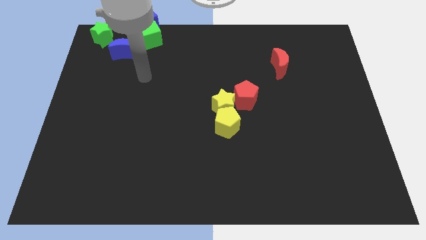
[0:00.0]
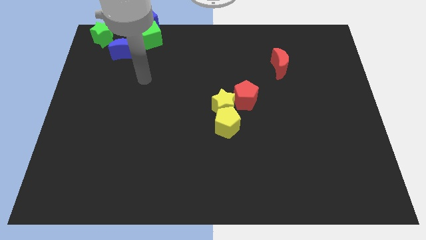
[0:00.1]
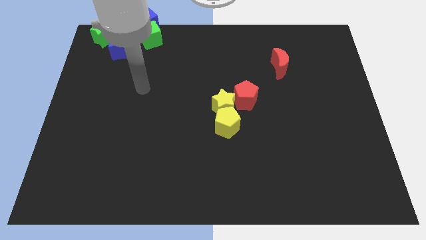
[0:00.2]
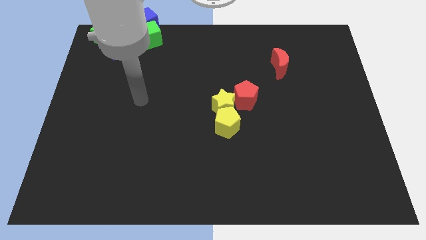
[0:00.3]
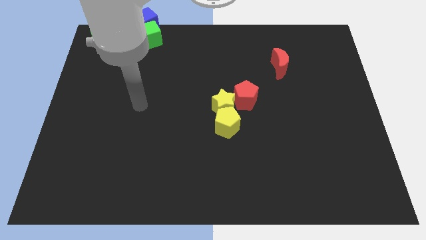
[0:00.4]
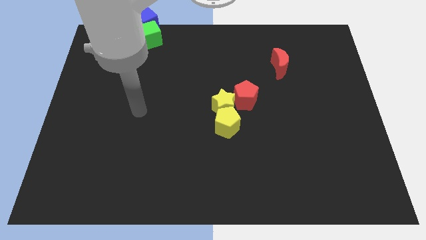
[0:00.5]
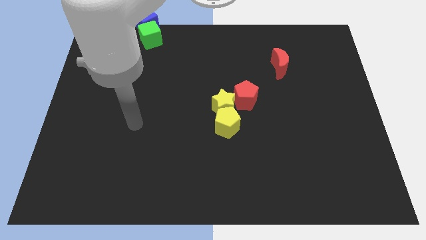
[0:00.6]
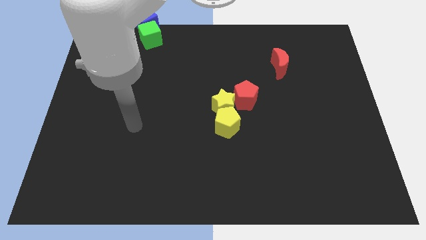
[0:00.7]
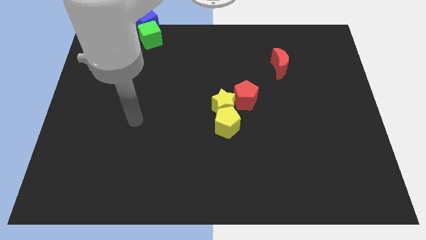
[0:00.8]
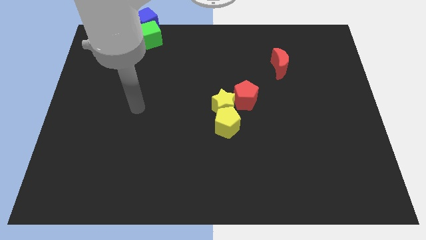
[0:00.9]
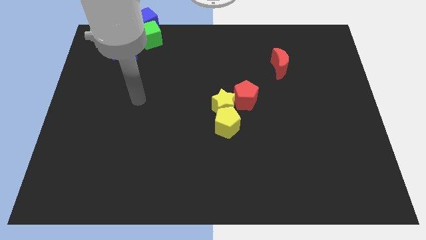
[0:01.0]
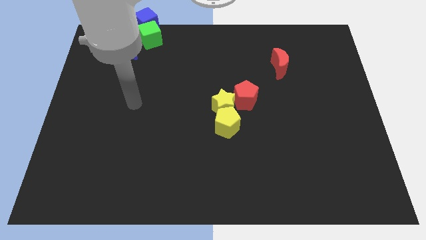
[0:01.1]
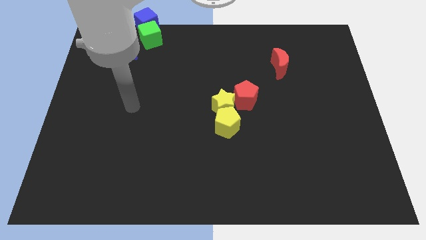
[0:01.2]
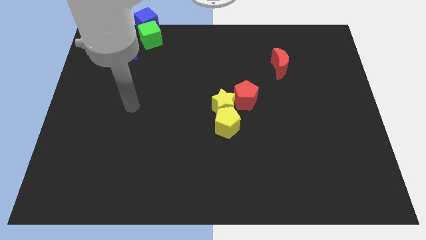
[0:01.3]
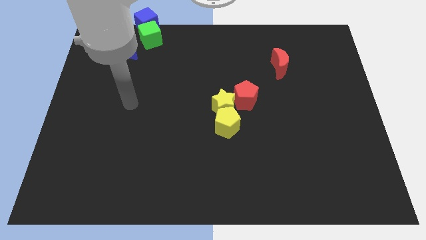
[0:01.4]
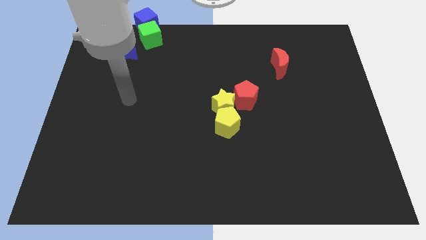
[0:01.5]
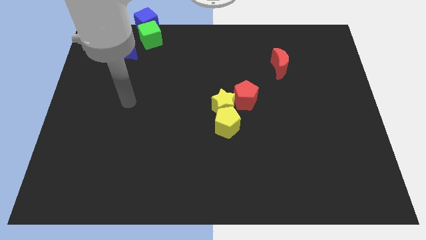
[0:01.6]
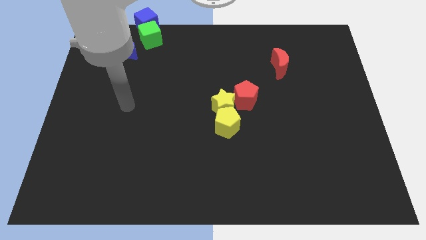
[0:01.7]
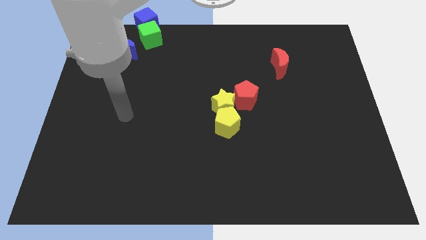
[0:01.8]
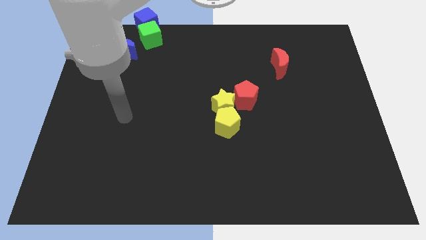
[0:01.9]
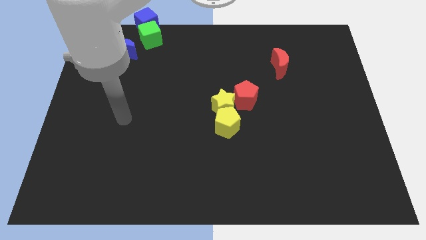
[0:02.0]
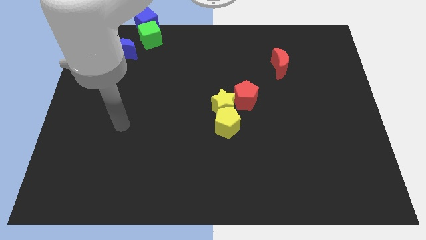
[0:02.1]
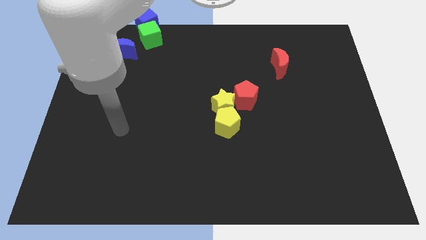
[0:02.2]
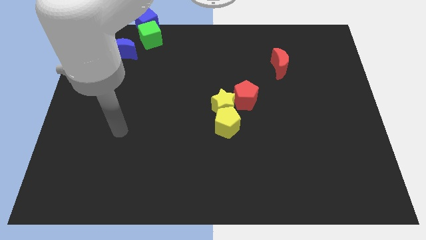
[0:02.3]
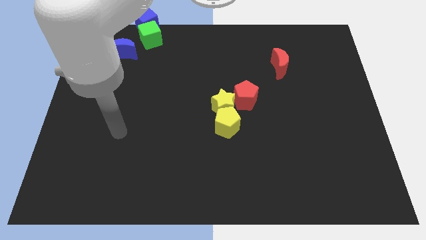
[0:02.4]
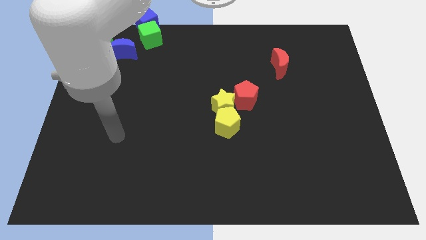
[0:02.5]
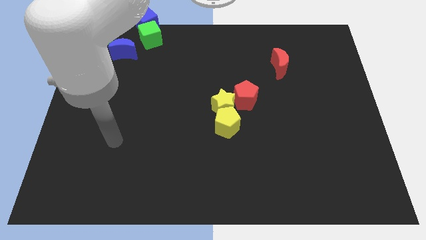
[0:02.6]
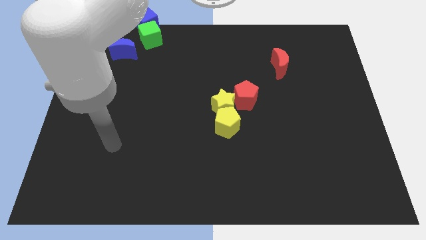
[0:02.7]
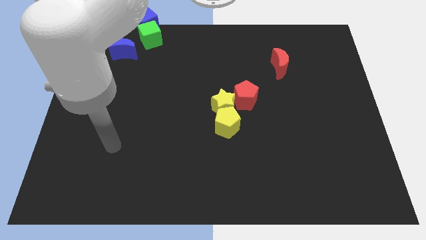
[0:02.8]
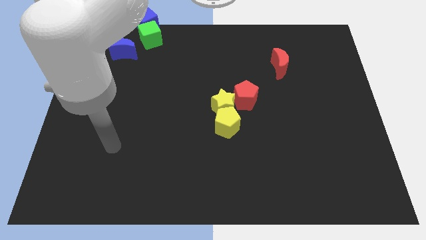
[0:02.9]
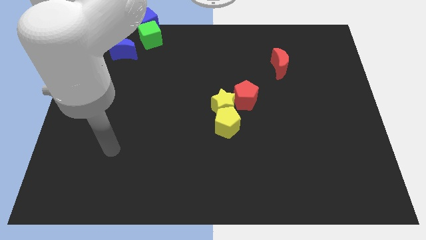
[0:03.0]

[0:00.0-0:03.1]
point your arm vertically below the blue crescent

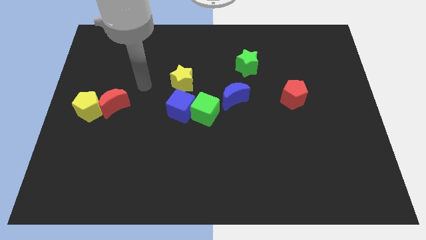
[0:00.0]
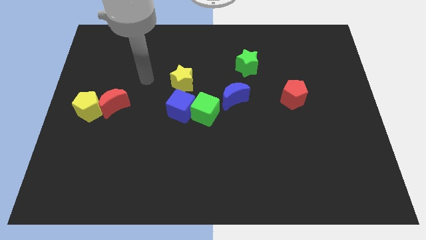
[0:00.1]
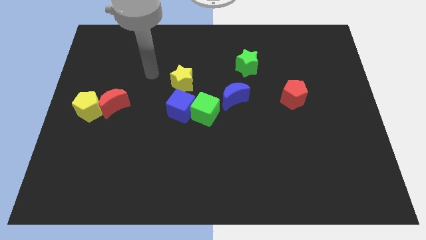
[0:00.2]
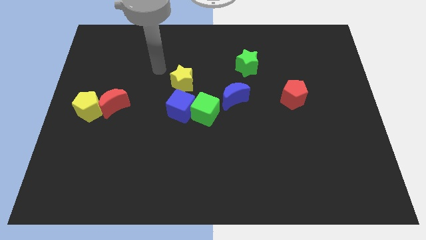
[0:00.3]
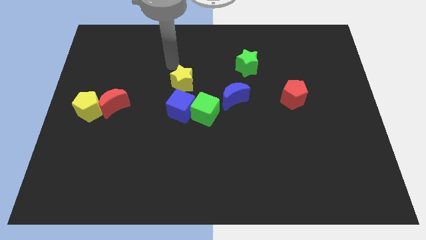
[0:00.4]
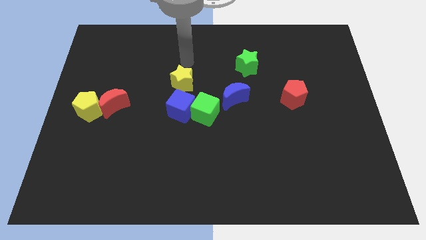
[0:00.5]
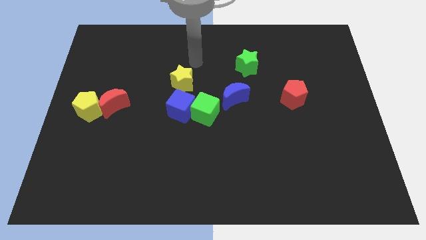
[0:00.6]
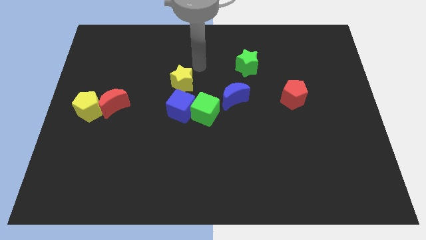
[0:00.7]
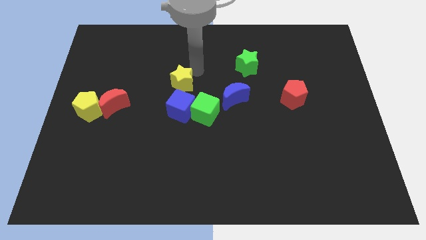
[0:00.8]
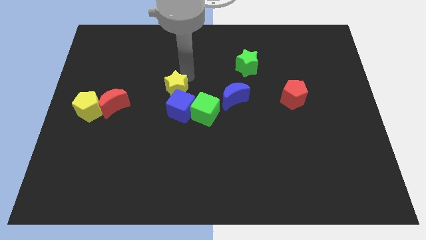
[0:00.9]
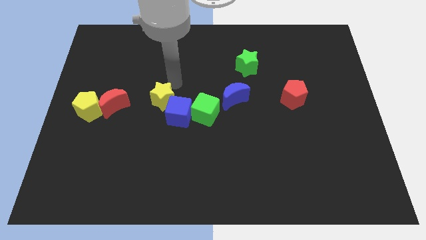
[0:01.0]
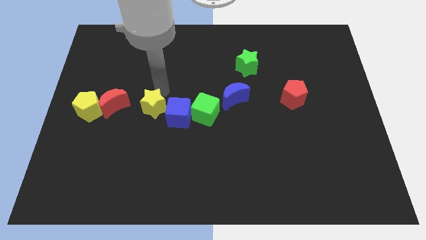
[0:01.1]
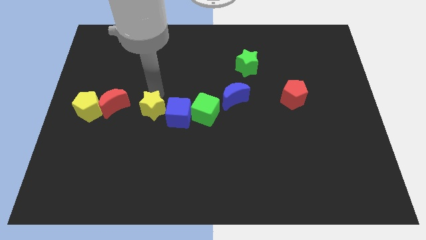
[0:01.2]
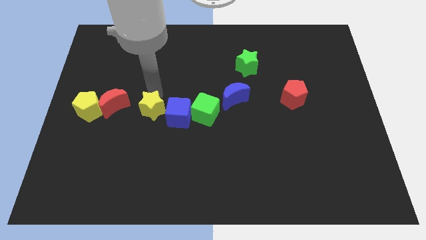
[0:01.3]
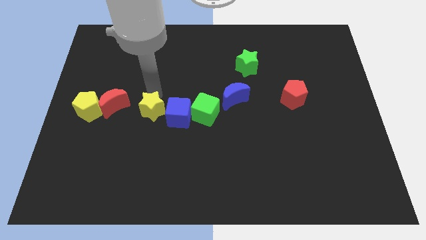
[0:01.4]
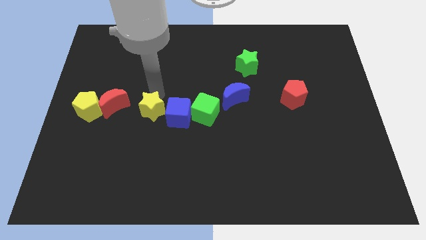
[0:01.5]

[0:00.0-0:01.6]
move the yellow star to the left side of the blue cube

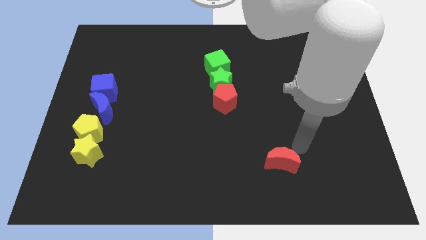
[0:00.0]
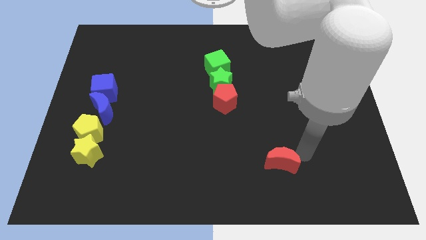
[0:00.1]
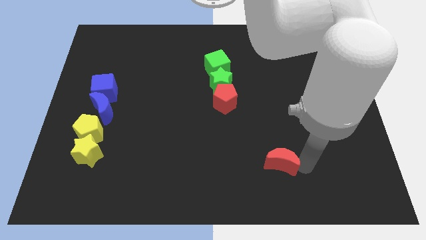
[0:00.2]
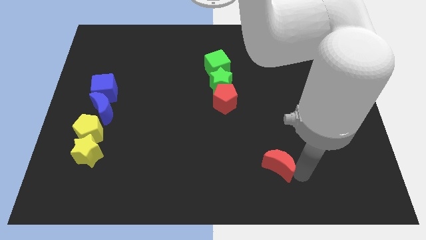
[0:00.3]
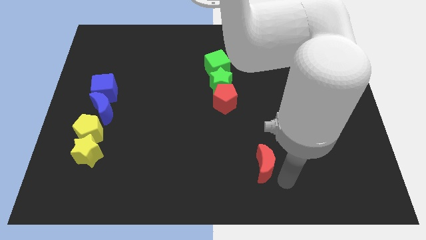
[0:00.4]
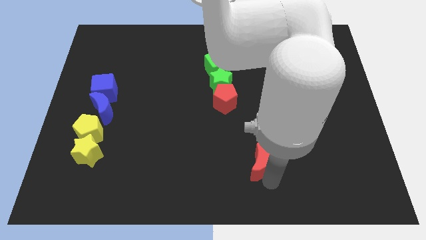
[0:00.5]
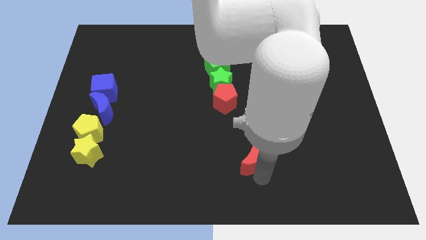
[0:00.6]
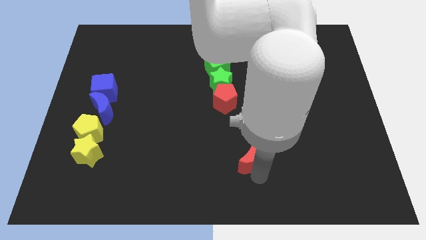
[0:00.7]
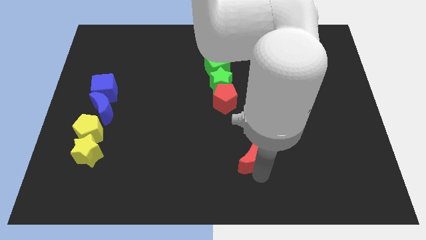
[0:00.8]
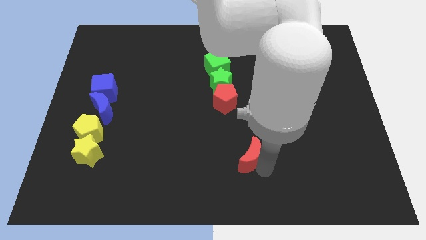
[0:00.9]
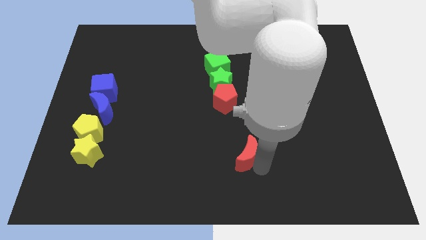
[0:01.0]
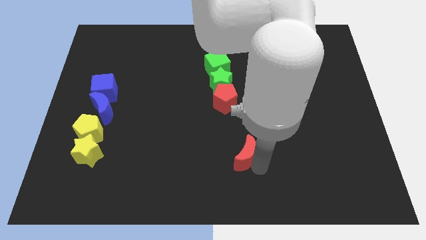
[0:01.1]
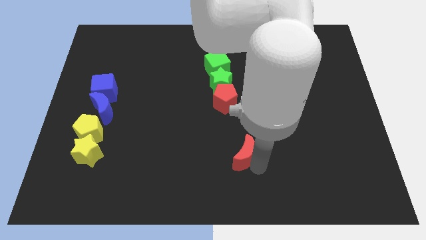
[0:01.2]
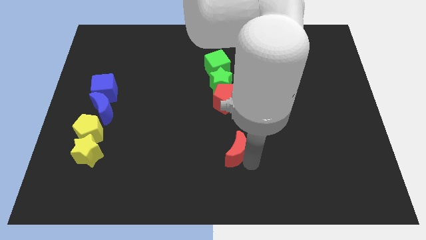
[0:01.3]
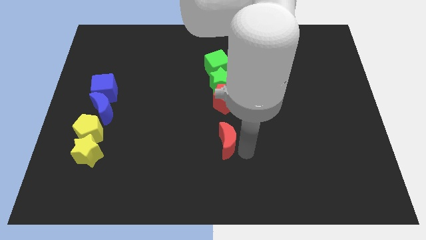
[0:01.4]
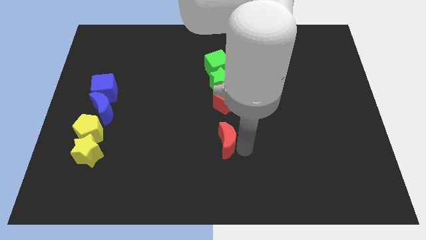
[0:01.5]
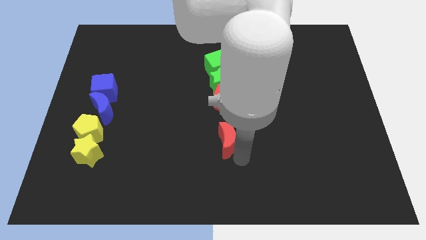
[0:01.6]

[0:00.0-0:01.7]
put the red moon vertically below the red pentagon

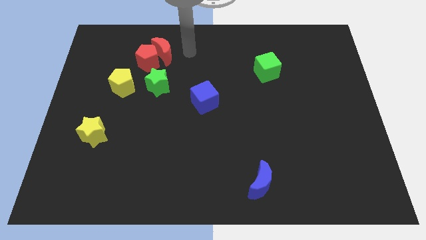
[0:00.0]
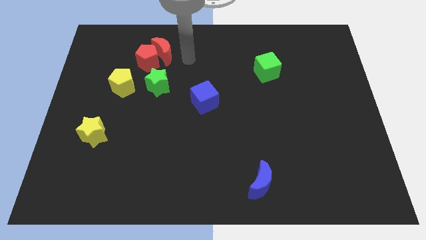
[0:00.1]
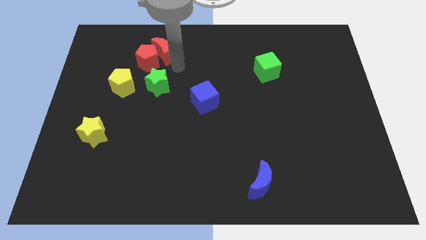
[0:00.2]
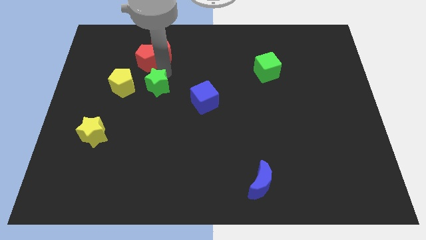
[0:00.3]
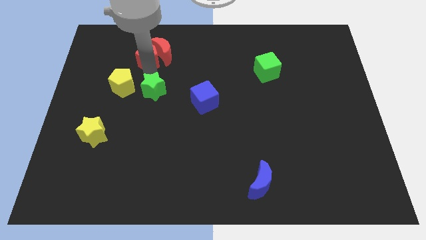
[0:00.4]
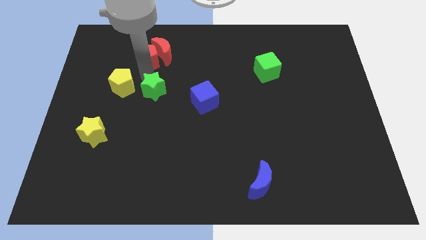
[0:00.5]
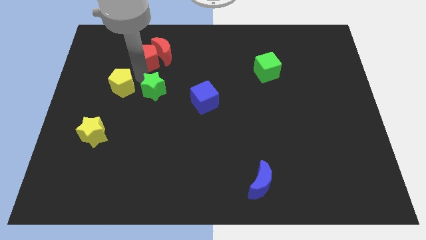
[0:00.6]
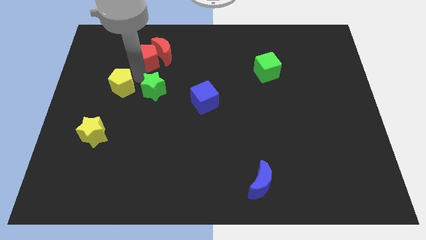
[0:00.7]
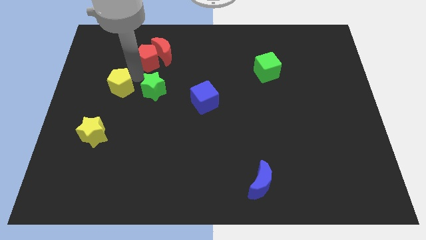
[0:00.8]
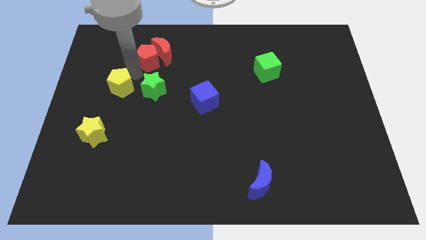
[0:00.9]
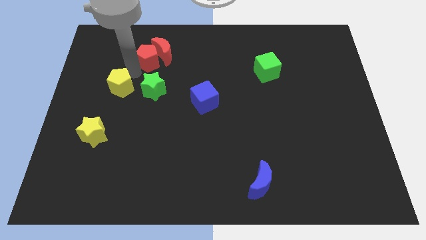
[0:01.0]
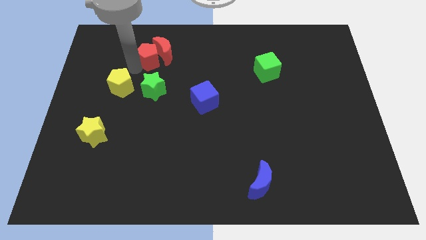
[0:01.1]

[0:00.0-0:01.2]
point your arm between red and yellow pentagons

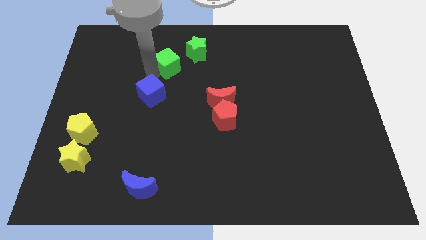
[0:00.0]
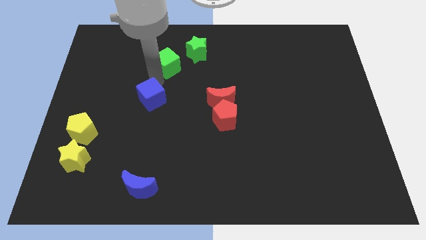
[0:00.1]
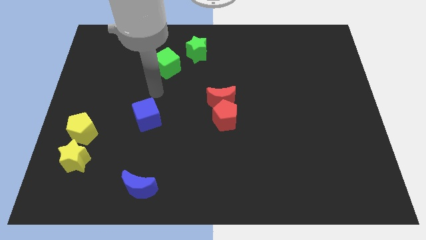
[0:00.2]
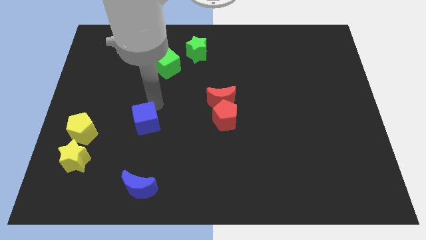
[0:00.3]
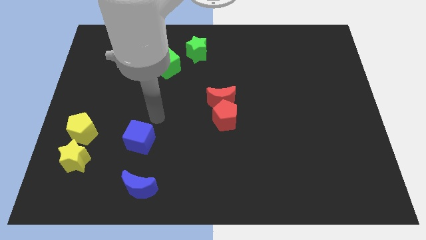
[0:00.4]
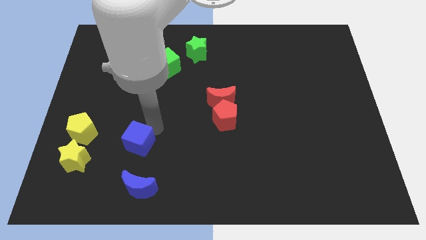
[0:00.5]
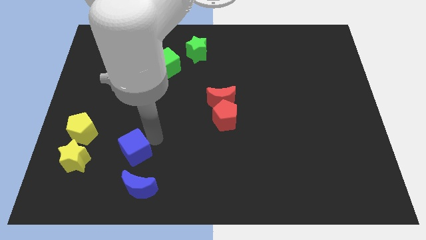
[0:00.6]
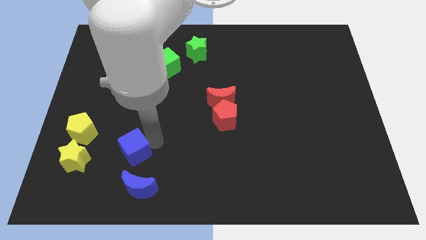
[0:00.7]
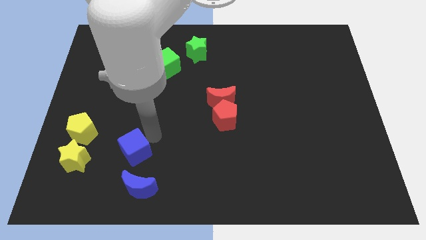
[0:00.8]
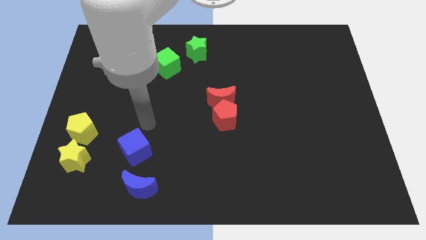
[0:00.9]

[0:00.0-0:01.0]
place the blue moon above the blue cube

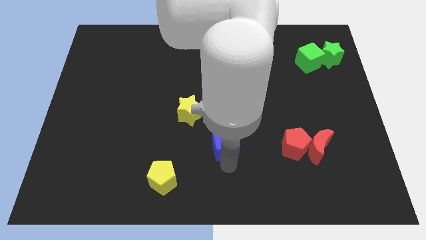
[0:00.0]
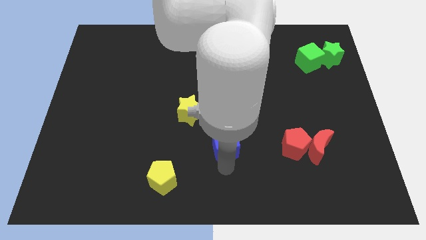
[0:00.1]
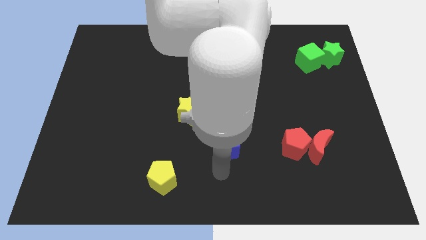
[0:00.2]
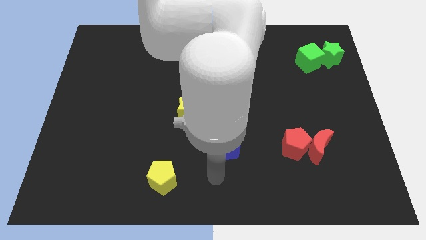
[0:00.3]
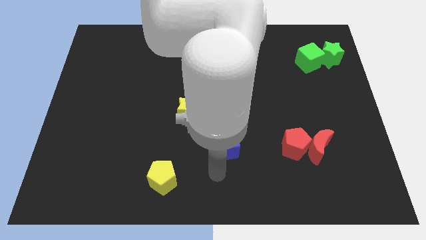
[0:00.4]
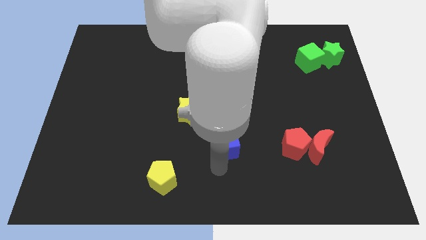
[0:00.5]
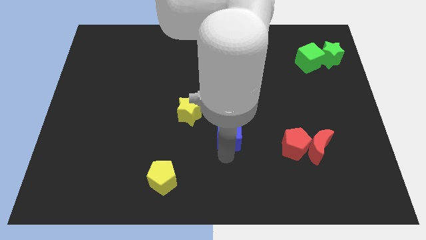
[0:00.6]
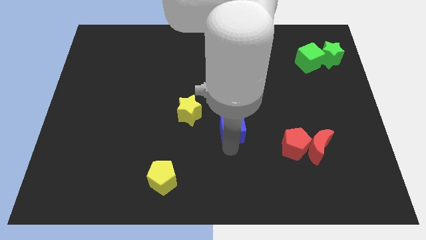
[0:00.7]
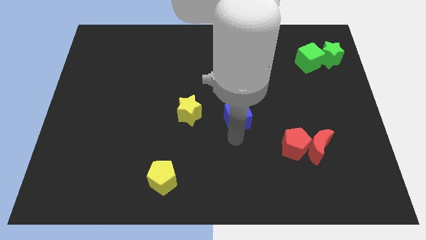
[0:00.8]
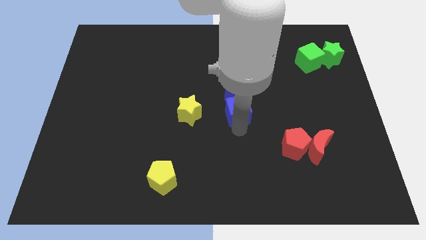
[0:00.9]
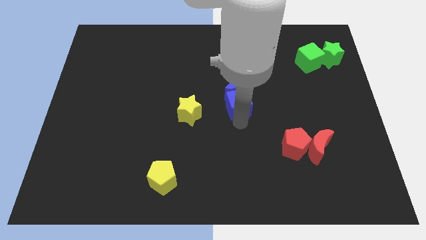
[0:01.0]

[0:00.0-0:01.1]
push blue cube towards blue moon
